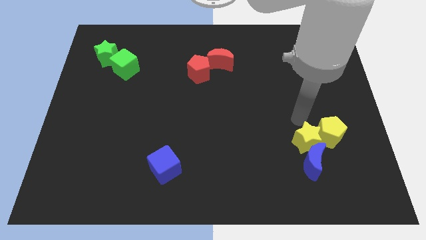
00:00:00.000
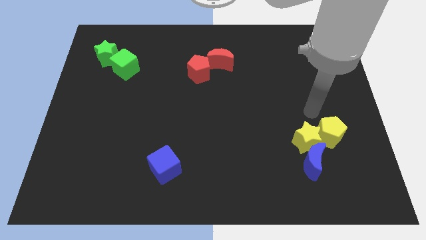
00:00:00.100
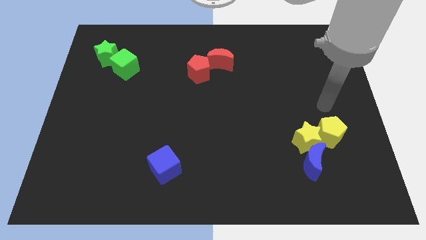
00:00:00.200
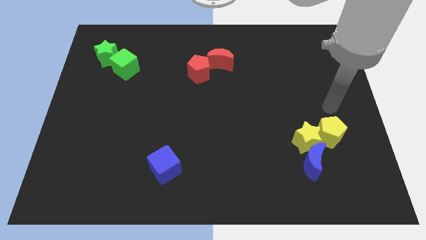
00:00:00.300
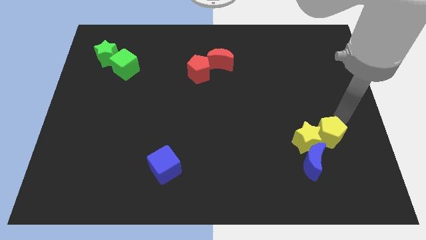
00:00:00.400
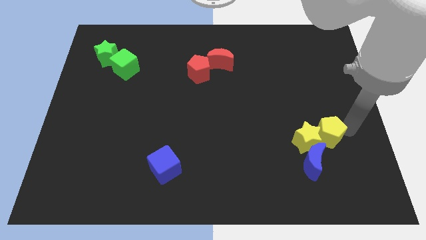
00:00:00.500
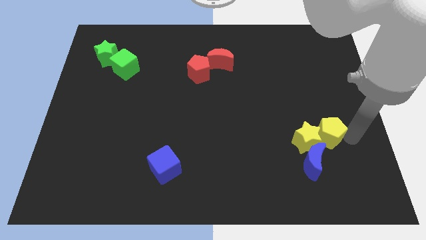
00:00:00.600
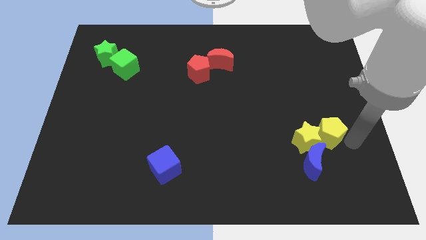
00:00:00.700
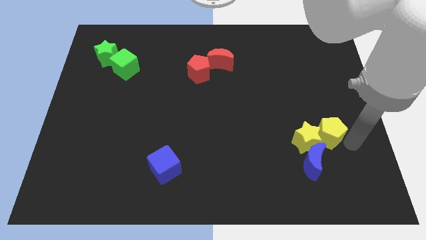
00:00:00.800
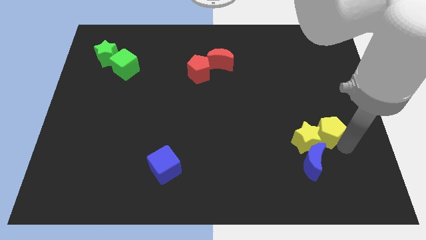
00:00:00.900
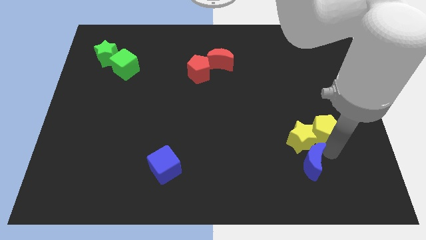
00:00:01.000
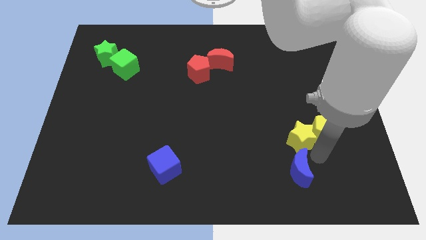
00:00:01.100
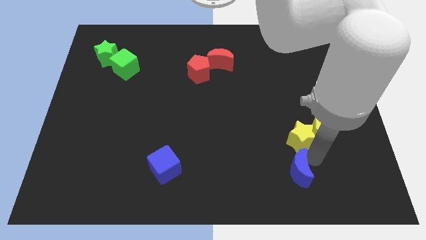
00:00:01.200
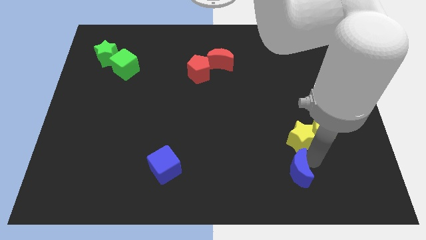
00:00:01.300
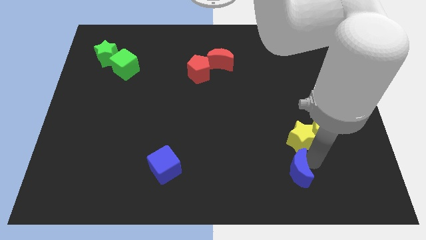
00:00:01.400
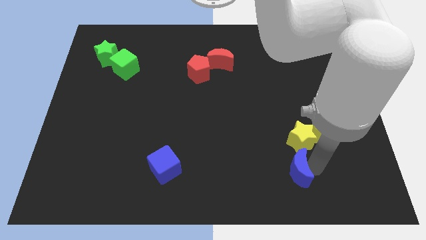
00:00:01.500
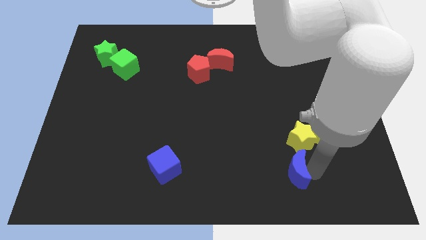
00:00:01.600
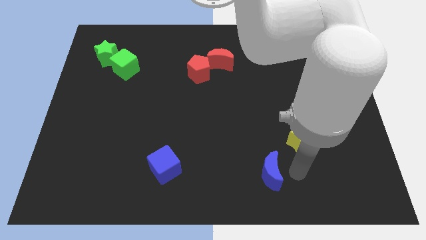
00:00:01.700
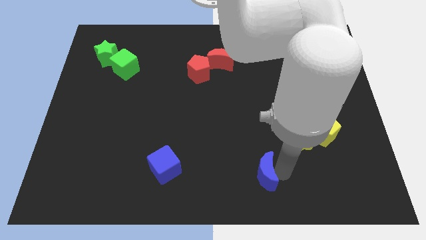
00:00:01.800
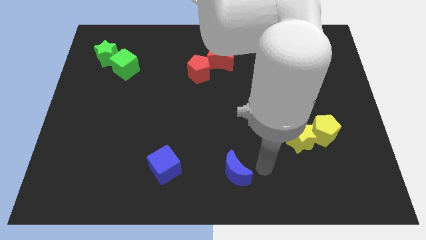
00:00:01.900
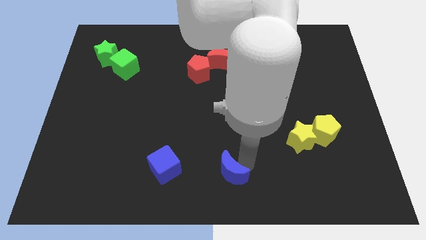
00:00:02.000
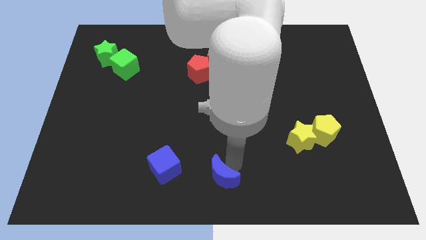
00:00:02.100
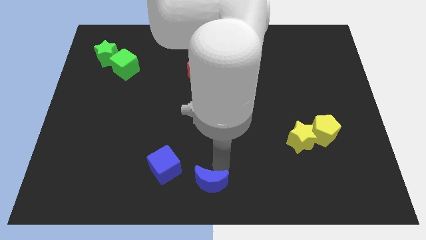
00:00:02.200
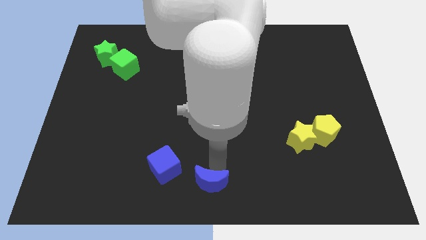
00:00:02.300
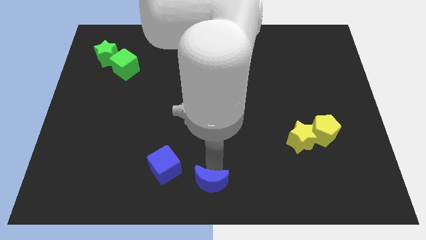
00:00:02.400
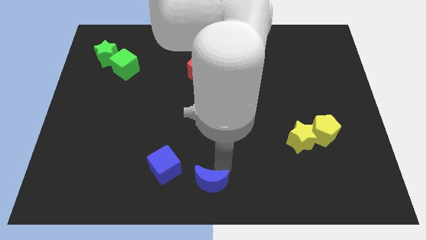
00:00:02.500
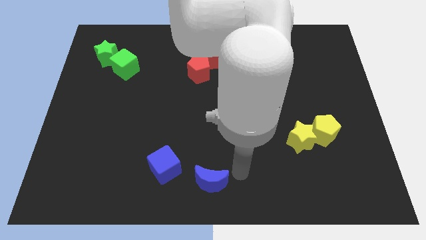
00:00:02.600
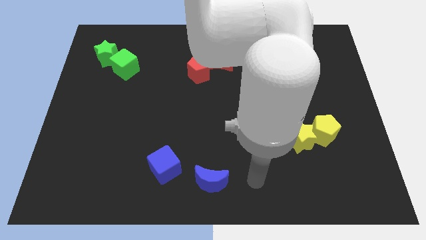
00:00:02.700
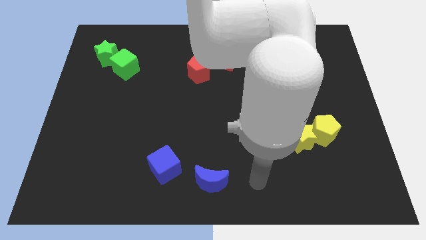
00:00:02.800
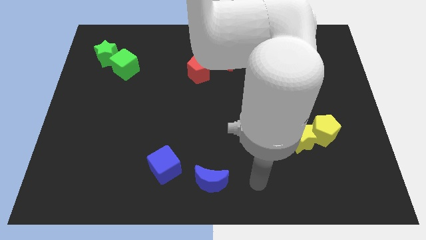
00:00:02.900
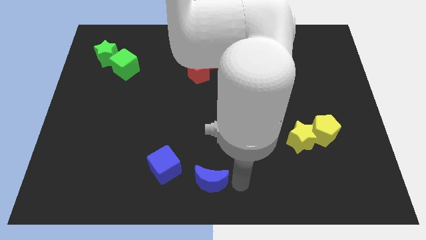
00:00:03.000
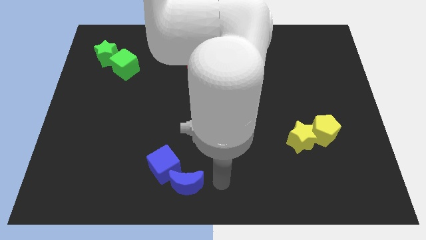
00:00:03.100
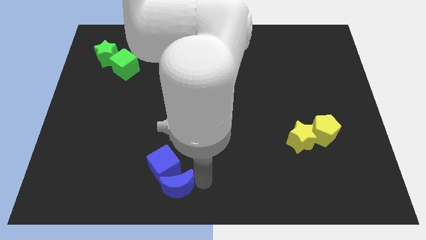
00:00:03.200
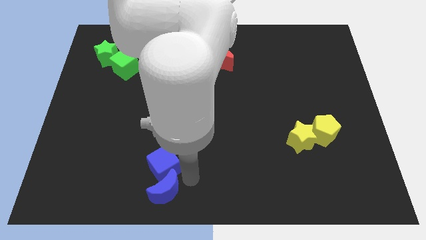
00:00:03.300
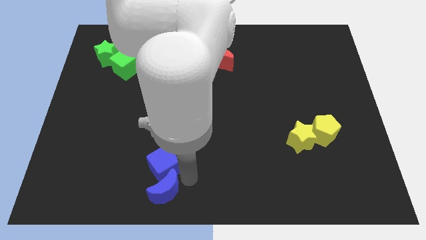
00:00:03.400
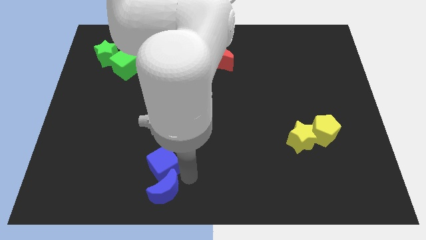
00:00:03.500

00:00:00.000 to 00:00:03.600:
push the blue moon into the left side of the board

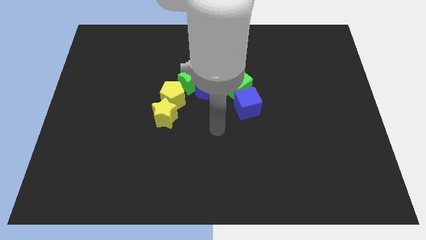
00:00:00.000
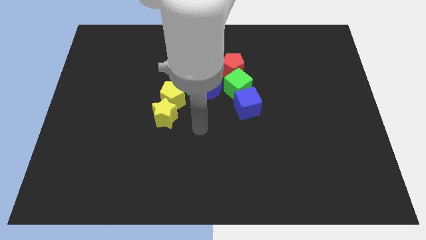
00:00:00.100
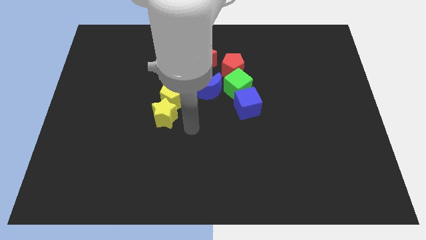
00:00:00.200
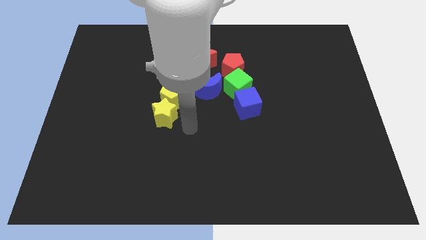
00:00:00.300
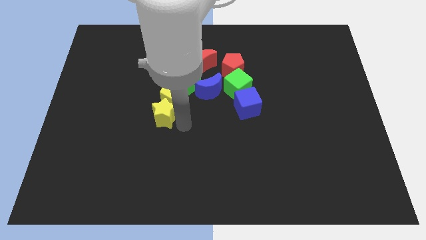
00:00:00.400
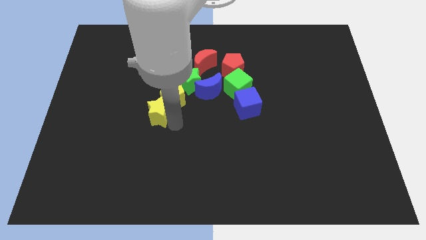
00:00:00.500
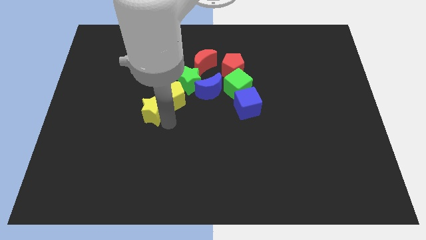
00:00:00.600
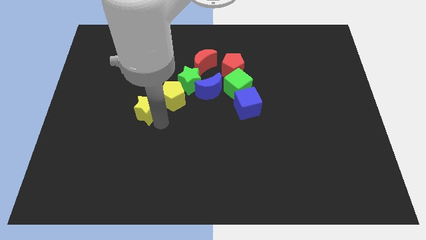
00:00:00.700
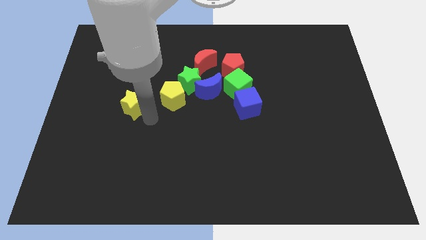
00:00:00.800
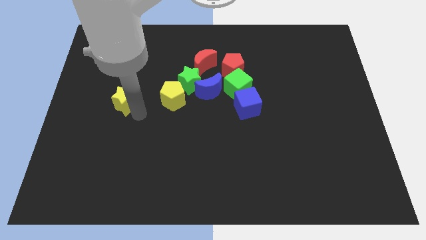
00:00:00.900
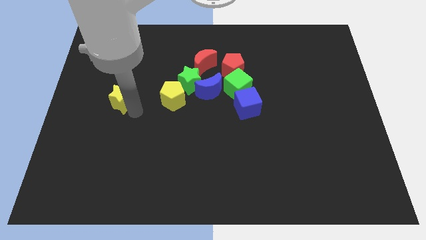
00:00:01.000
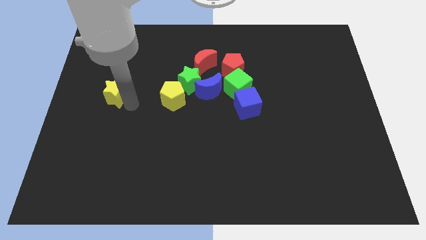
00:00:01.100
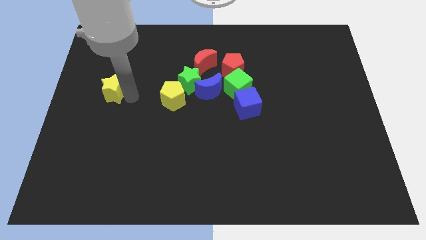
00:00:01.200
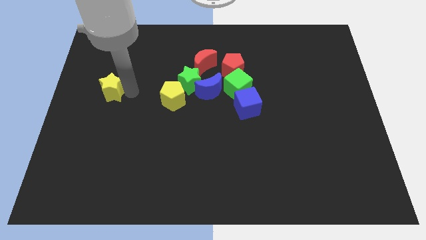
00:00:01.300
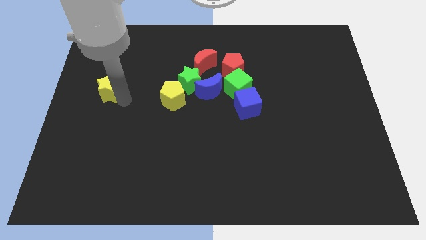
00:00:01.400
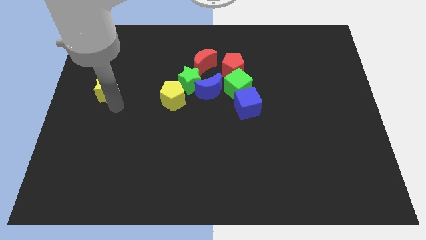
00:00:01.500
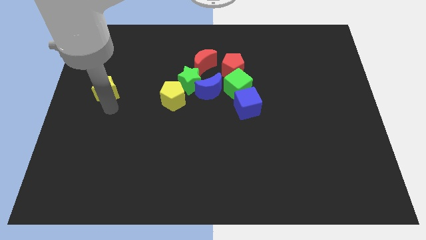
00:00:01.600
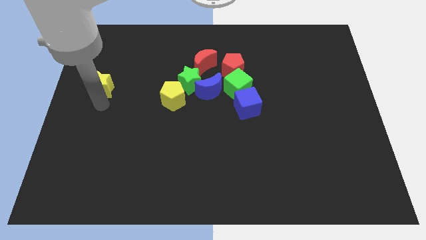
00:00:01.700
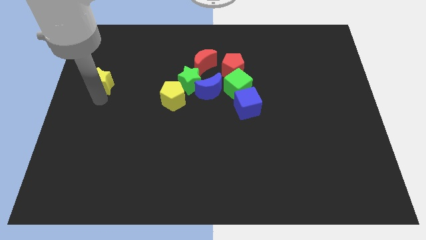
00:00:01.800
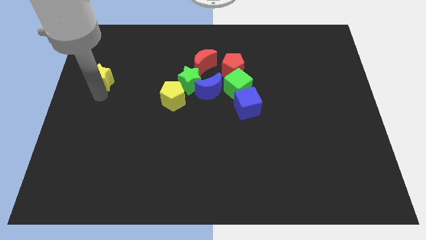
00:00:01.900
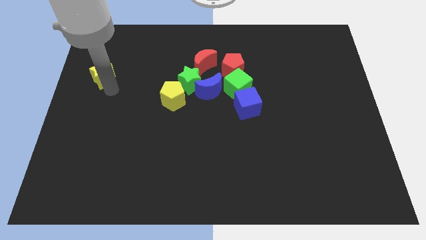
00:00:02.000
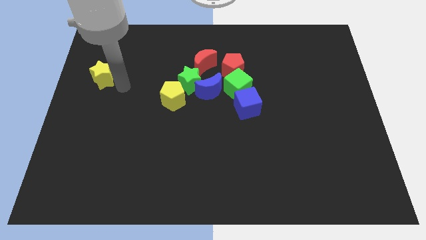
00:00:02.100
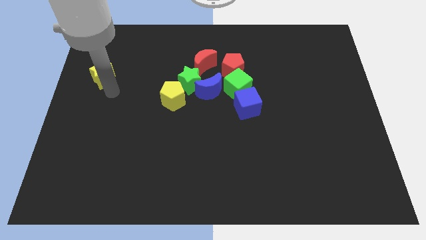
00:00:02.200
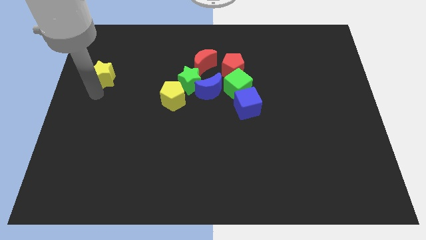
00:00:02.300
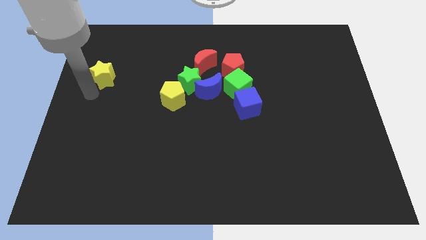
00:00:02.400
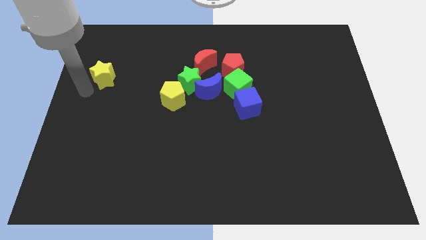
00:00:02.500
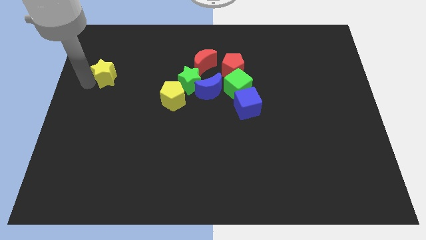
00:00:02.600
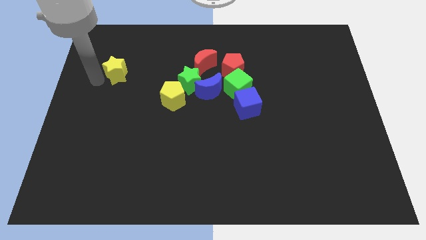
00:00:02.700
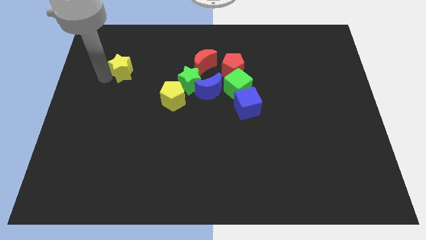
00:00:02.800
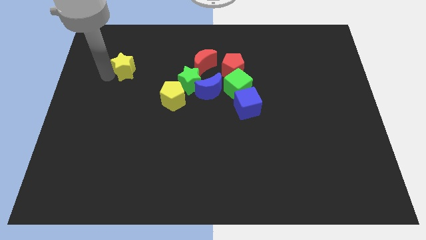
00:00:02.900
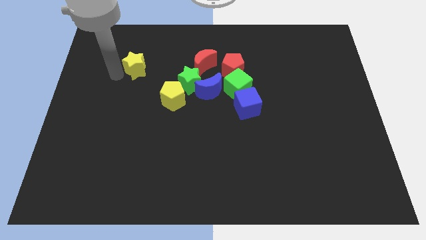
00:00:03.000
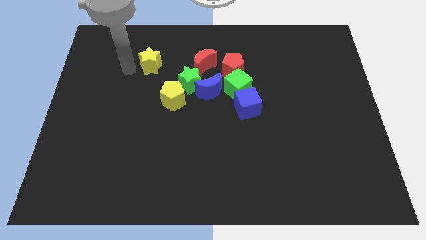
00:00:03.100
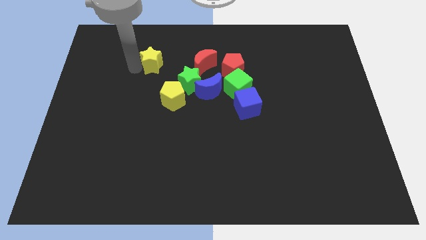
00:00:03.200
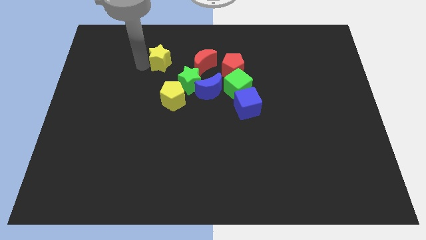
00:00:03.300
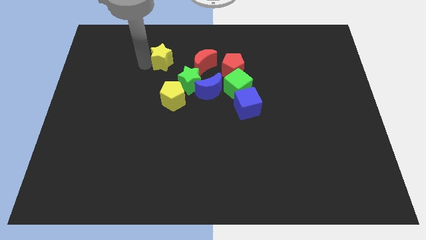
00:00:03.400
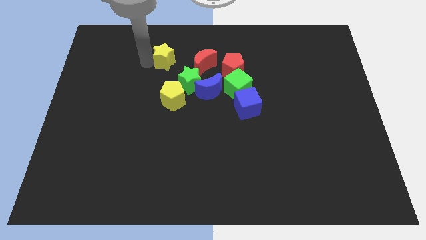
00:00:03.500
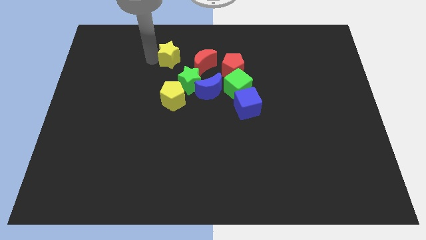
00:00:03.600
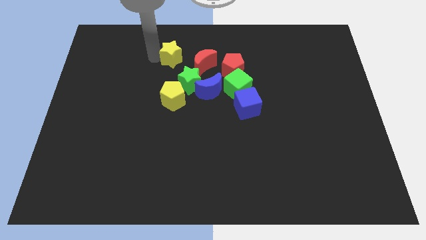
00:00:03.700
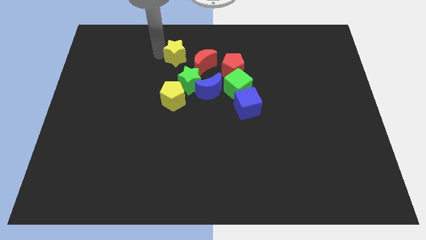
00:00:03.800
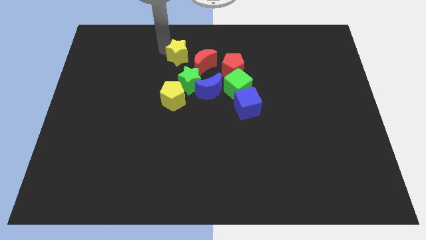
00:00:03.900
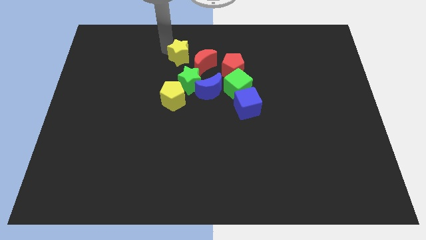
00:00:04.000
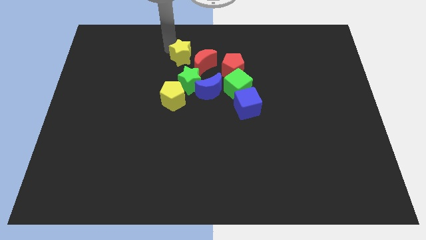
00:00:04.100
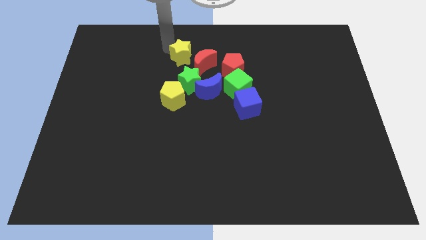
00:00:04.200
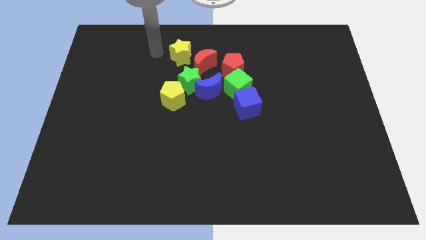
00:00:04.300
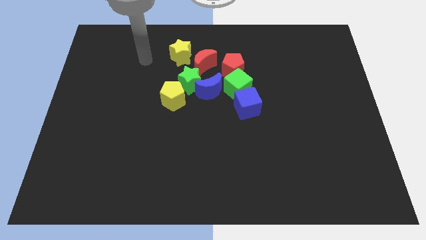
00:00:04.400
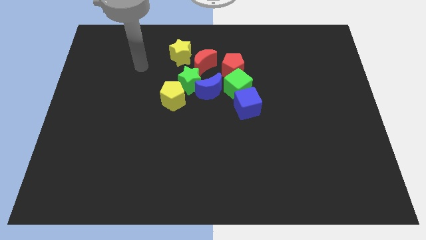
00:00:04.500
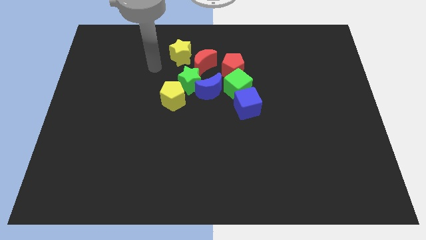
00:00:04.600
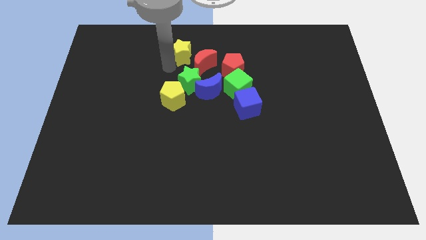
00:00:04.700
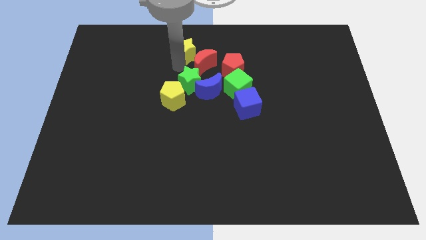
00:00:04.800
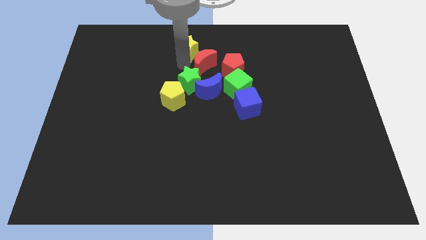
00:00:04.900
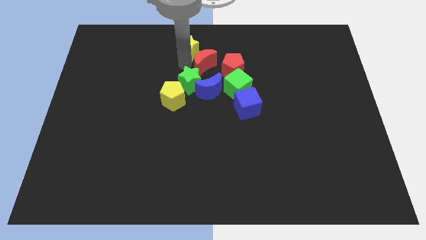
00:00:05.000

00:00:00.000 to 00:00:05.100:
push the yellow star to the top of the green star

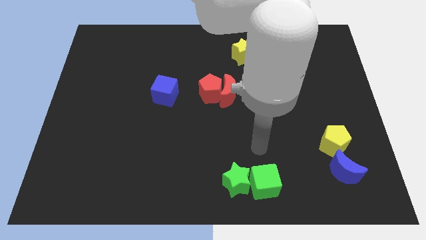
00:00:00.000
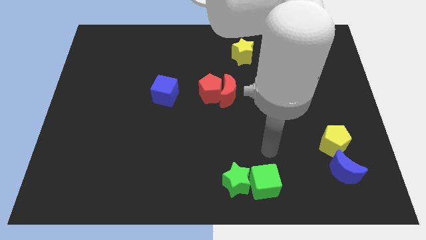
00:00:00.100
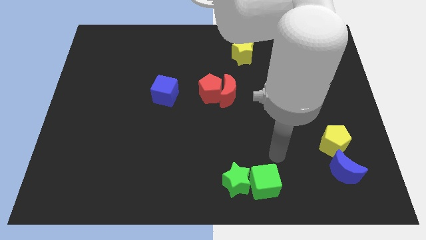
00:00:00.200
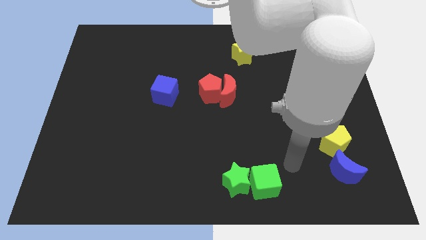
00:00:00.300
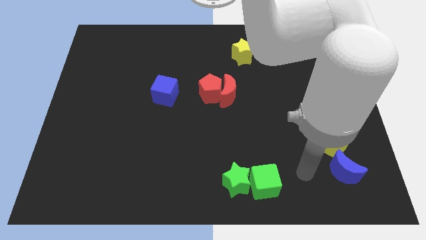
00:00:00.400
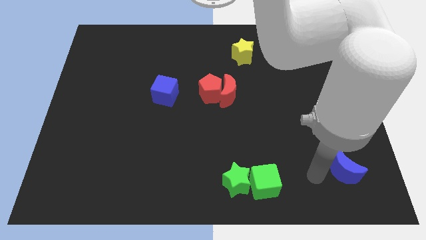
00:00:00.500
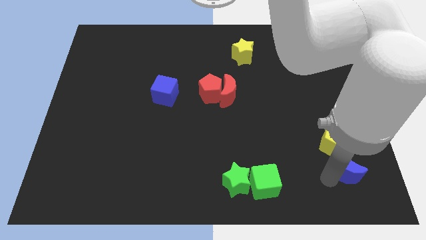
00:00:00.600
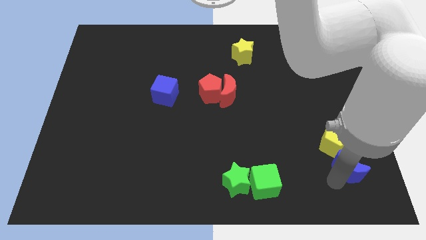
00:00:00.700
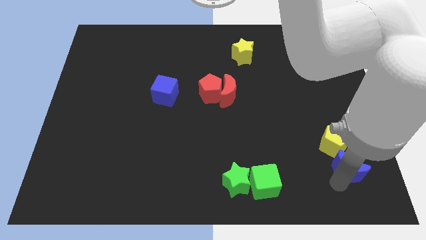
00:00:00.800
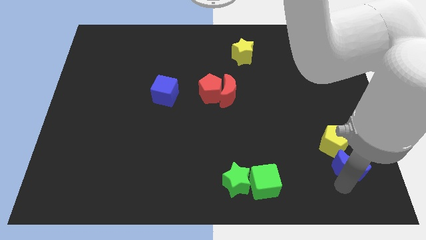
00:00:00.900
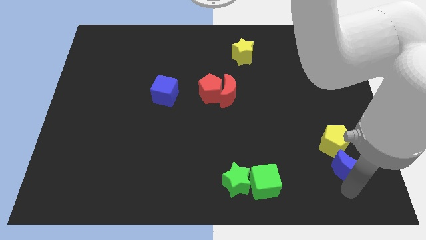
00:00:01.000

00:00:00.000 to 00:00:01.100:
place your arm to the bottom of the blue moon
